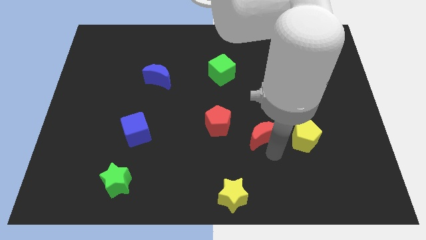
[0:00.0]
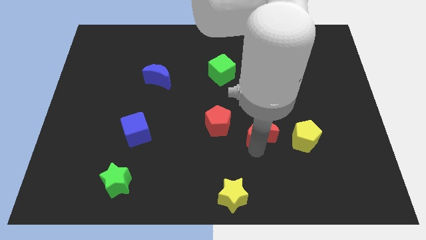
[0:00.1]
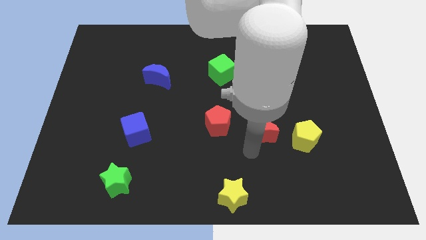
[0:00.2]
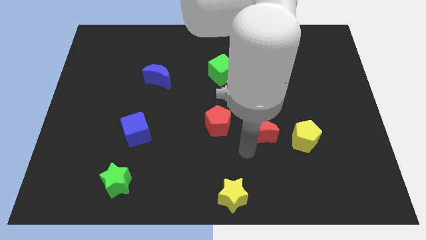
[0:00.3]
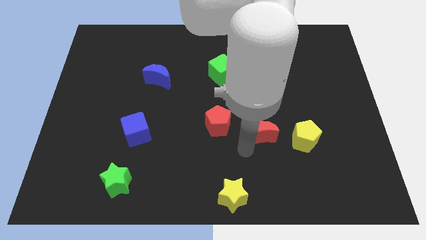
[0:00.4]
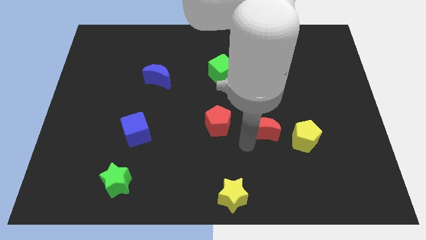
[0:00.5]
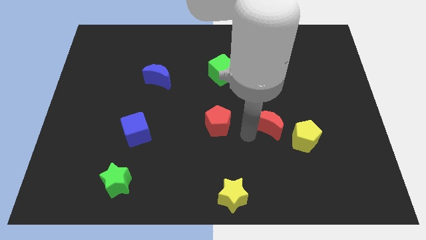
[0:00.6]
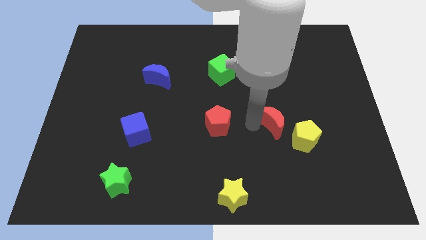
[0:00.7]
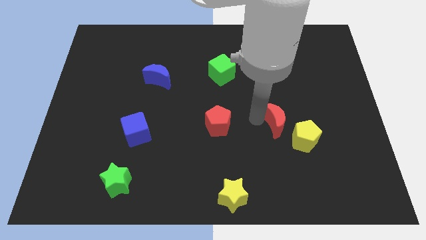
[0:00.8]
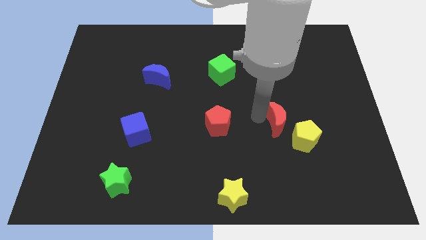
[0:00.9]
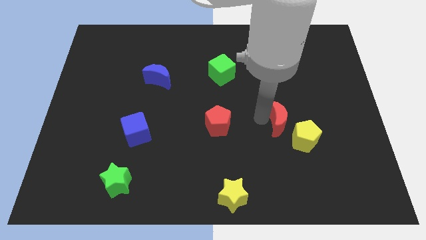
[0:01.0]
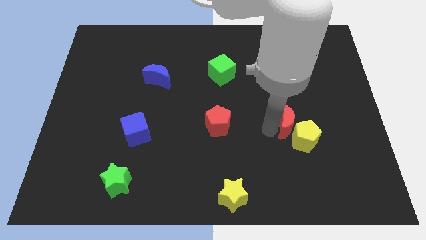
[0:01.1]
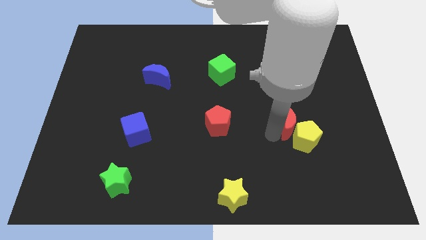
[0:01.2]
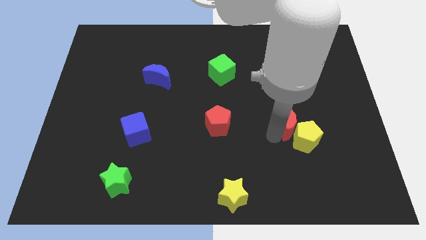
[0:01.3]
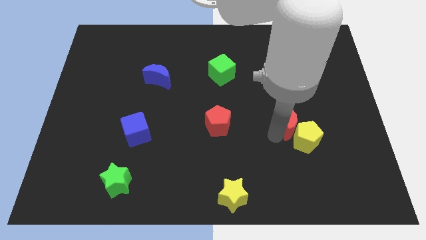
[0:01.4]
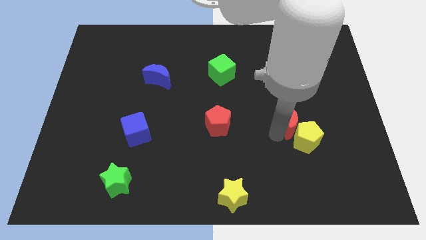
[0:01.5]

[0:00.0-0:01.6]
move the red crescent into the left side of the yellow pentagon

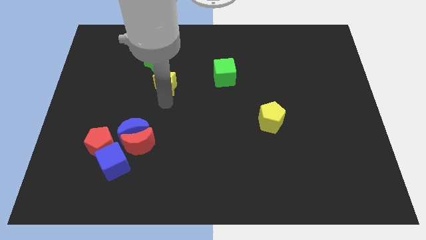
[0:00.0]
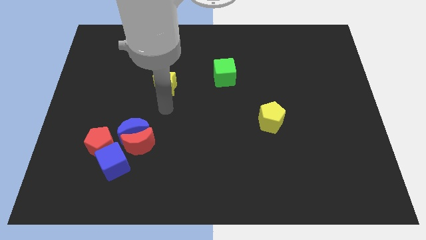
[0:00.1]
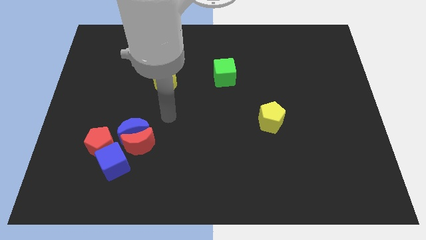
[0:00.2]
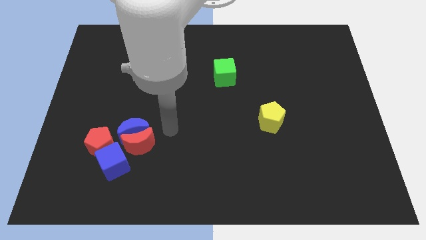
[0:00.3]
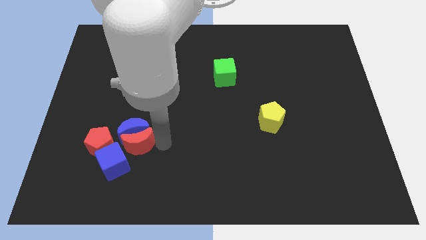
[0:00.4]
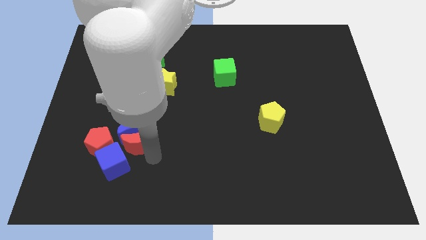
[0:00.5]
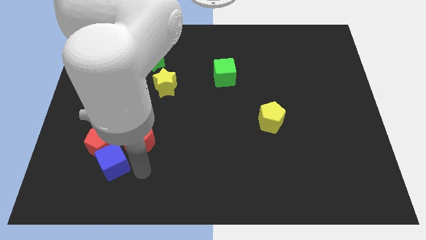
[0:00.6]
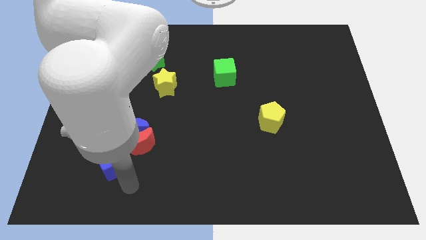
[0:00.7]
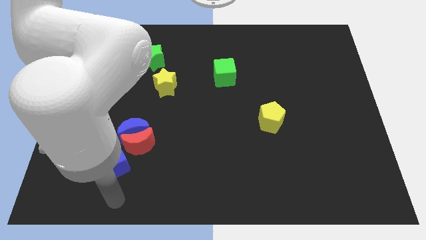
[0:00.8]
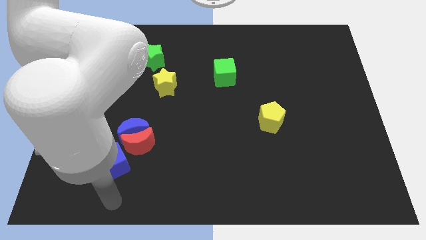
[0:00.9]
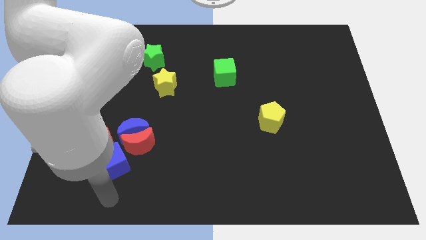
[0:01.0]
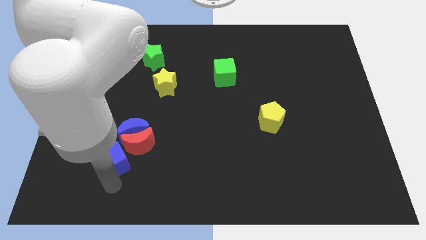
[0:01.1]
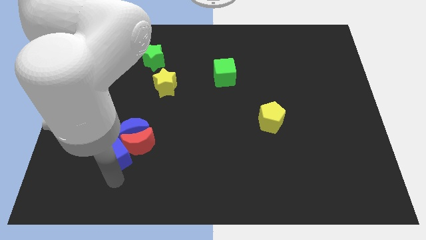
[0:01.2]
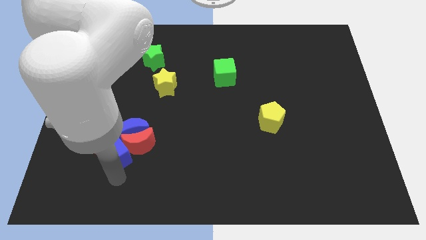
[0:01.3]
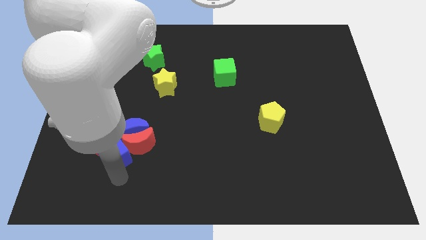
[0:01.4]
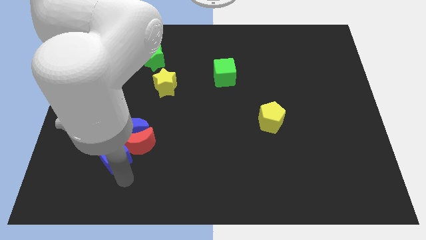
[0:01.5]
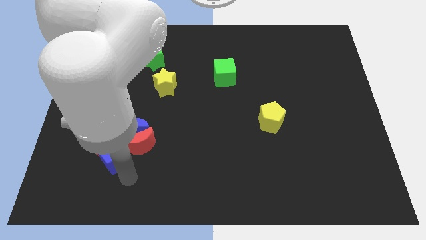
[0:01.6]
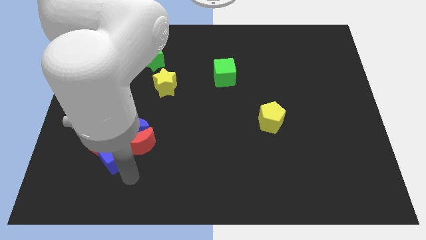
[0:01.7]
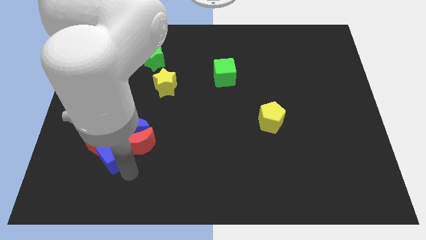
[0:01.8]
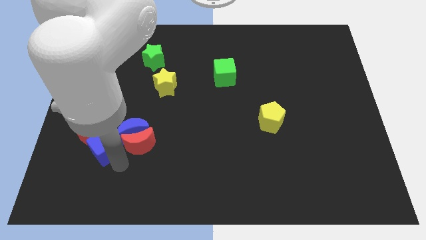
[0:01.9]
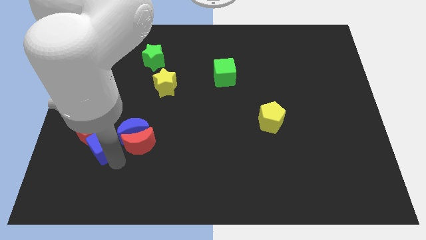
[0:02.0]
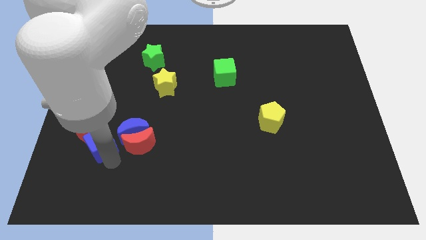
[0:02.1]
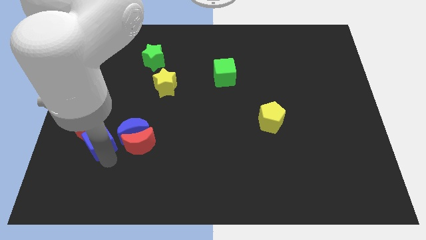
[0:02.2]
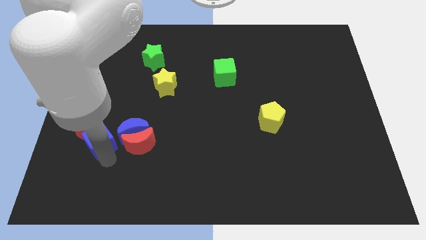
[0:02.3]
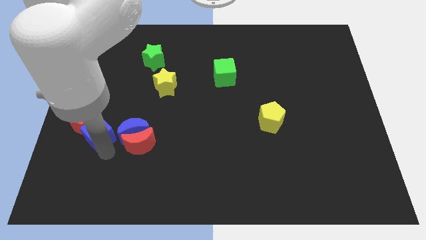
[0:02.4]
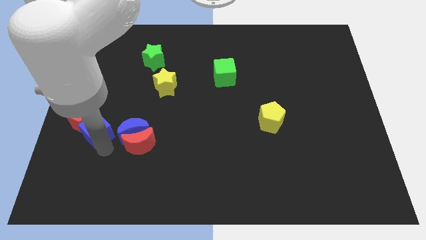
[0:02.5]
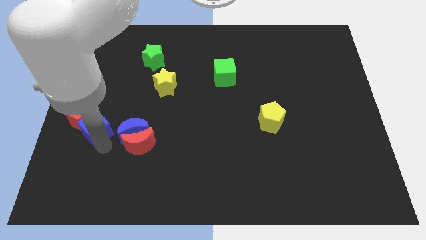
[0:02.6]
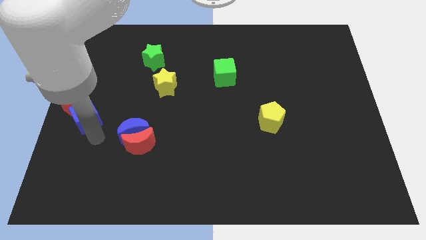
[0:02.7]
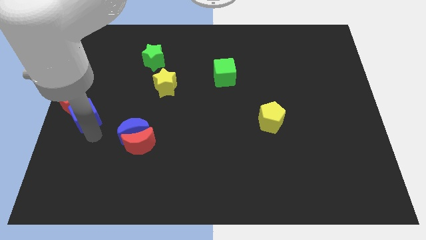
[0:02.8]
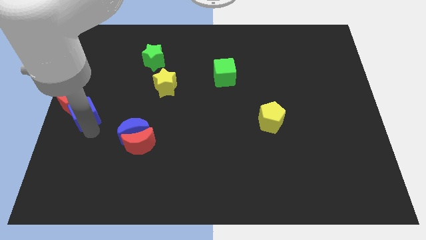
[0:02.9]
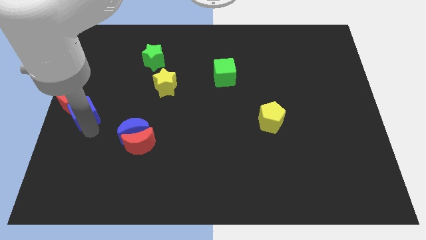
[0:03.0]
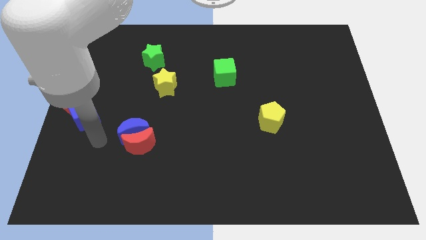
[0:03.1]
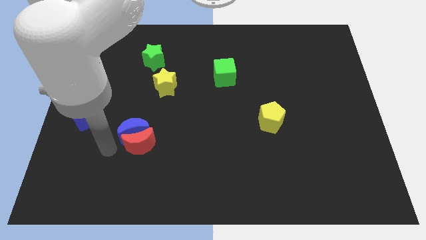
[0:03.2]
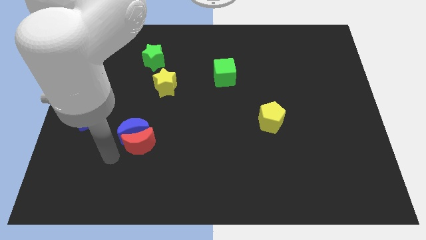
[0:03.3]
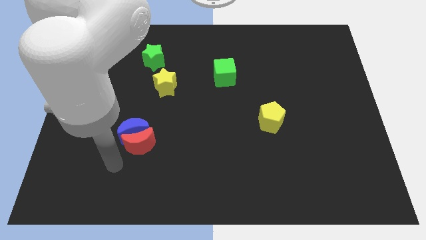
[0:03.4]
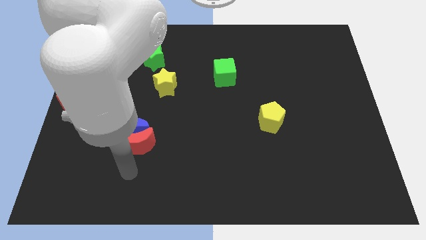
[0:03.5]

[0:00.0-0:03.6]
move the blue cube and the red pentagon to the left center of the board

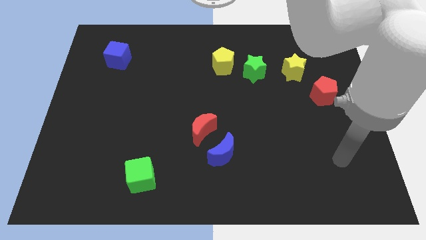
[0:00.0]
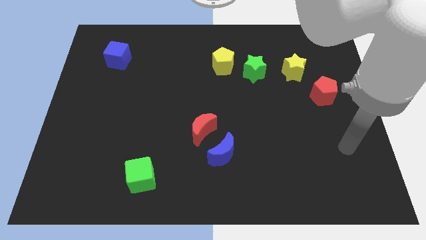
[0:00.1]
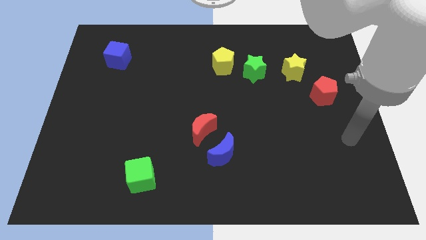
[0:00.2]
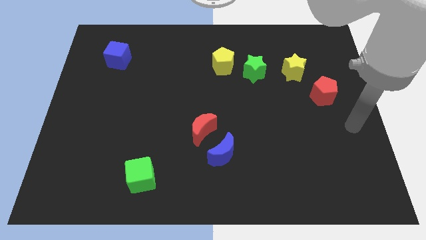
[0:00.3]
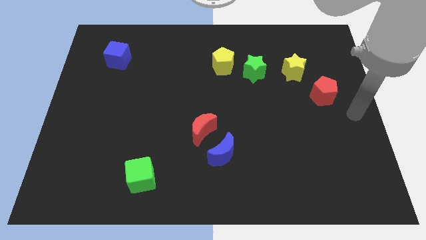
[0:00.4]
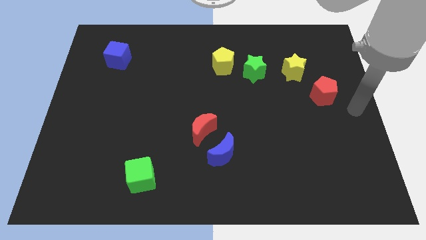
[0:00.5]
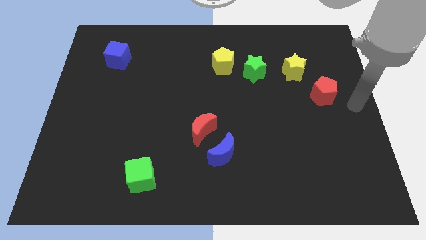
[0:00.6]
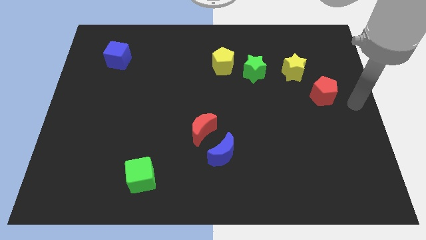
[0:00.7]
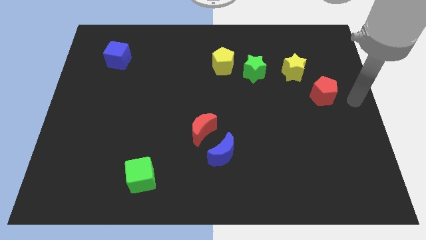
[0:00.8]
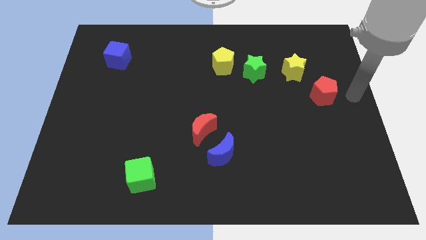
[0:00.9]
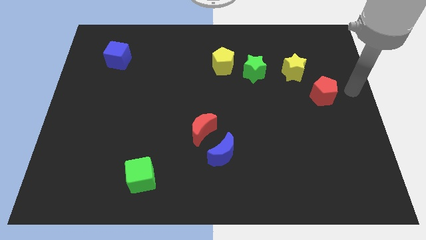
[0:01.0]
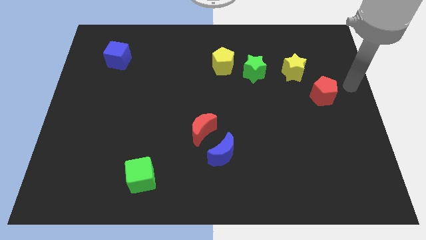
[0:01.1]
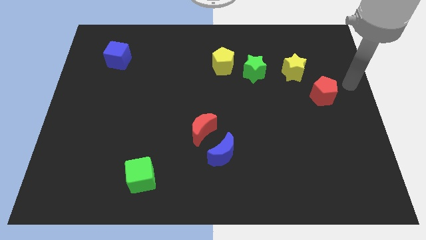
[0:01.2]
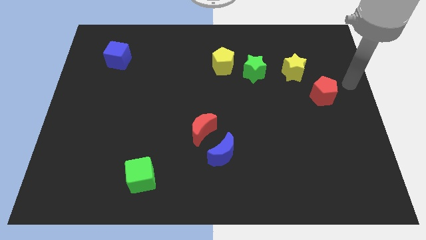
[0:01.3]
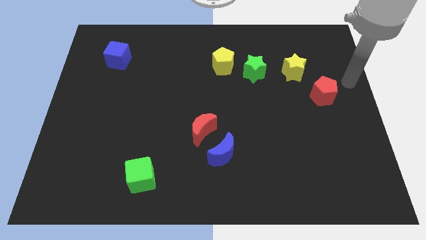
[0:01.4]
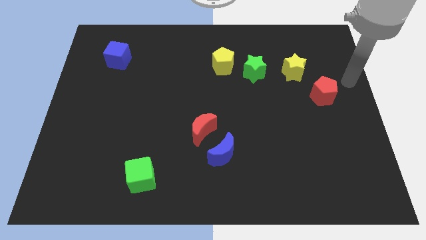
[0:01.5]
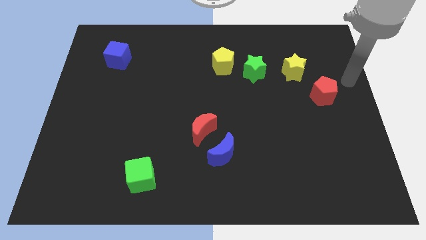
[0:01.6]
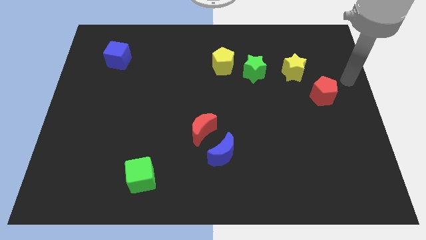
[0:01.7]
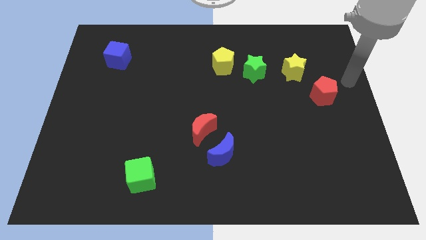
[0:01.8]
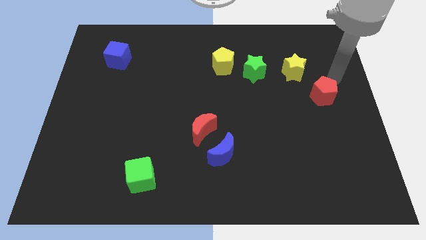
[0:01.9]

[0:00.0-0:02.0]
move your arm towards the red pentagon

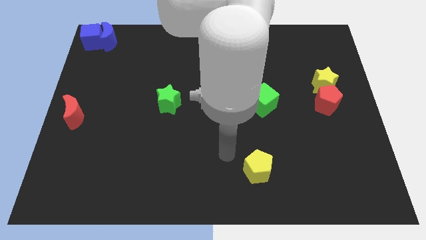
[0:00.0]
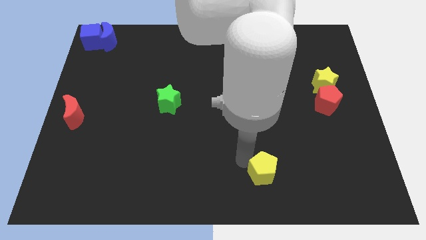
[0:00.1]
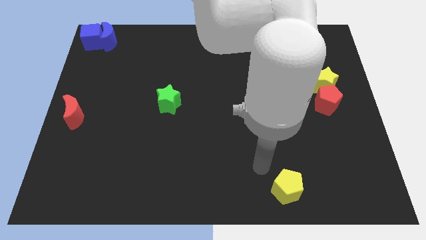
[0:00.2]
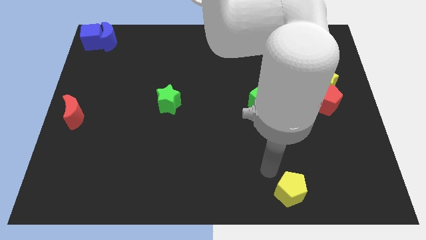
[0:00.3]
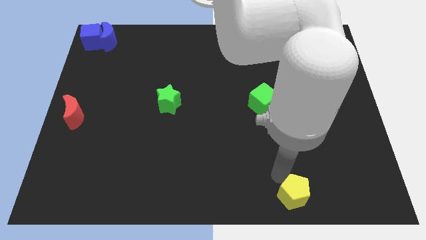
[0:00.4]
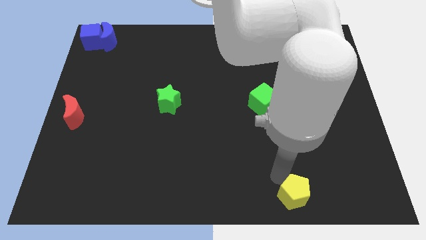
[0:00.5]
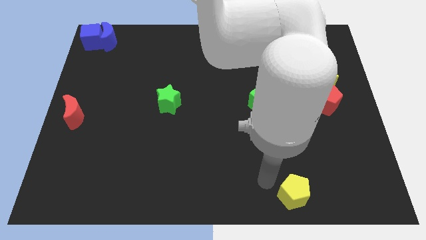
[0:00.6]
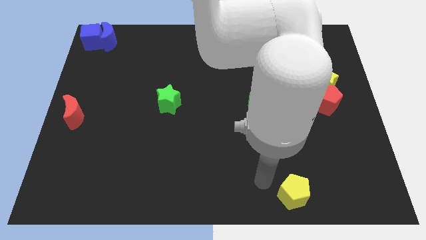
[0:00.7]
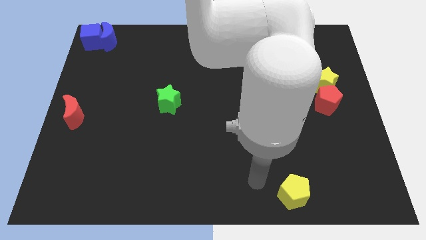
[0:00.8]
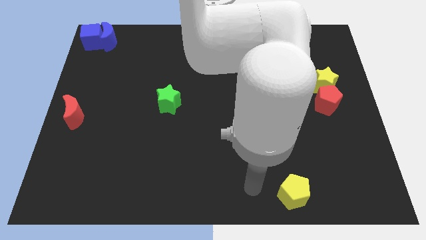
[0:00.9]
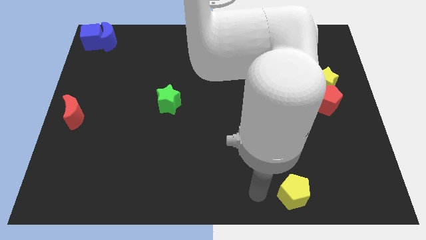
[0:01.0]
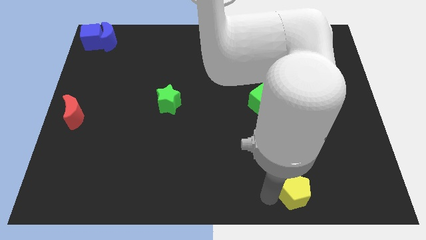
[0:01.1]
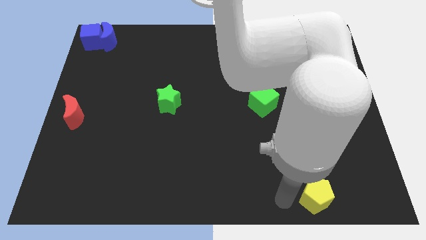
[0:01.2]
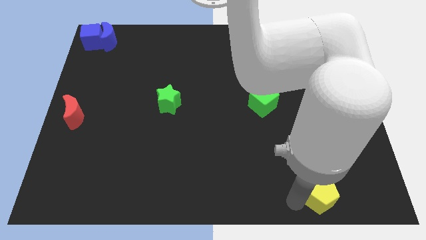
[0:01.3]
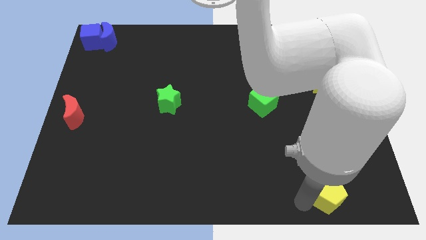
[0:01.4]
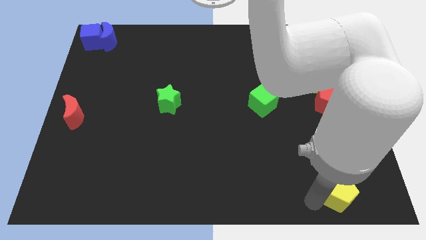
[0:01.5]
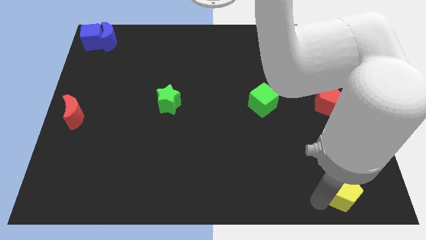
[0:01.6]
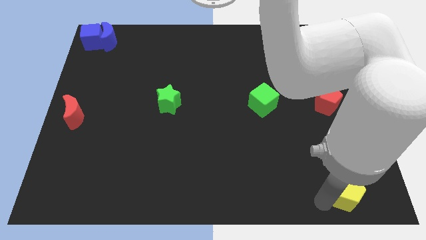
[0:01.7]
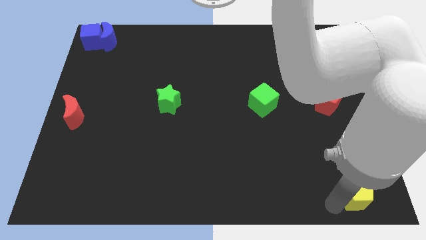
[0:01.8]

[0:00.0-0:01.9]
push the yellow pentagon towards the bottom right

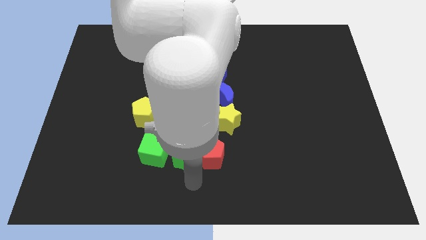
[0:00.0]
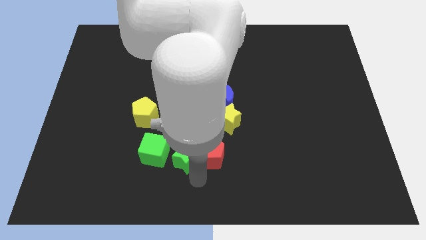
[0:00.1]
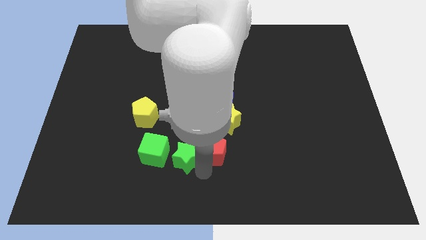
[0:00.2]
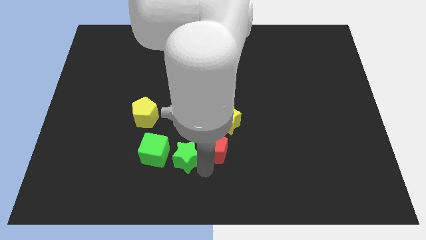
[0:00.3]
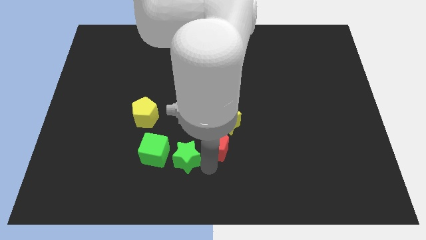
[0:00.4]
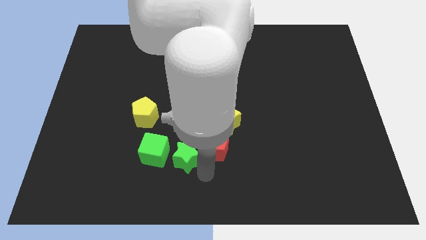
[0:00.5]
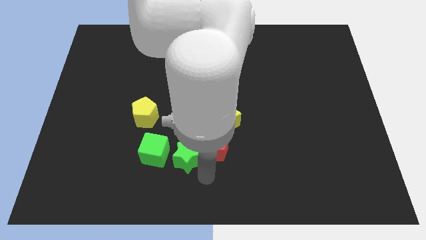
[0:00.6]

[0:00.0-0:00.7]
push the red pentagon down to the yellow star
